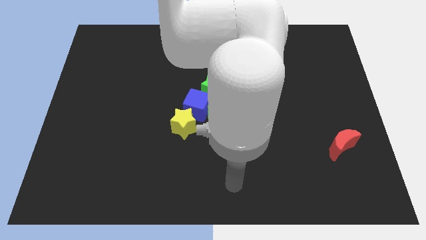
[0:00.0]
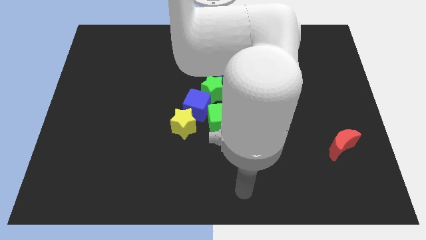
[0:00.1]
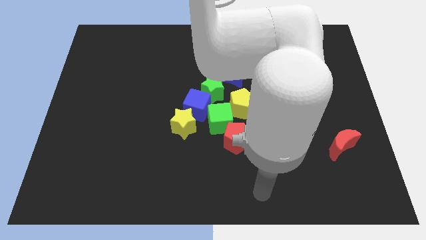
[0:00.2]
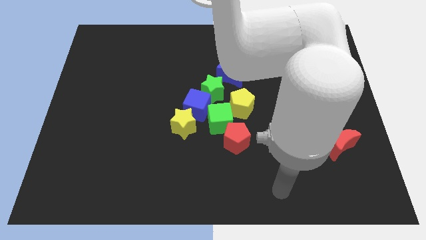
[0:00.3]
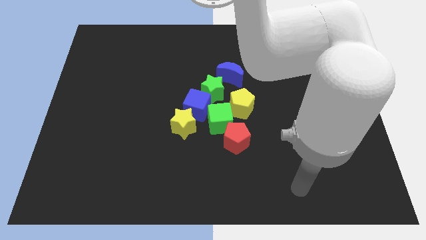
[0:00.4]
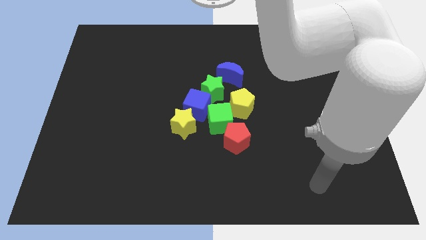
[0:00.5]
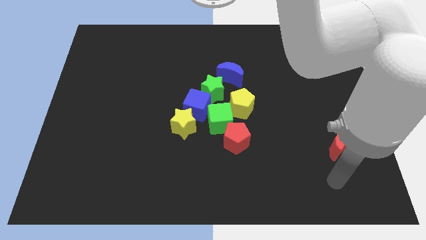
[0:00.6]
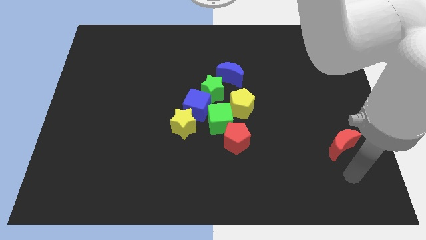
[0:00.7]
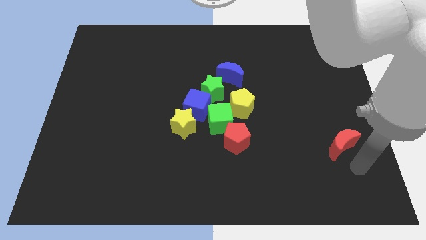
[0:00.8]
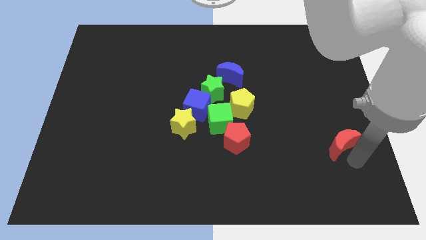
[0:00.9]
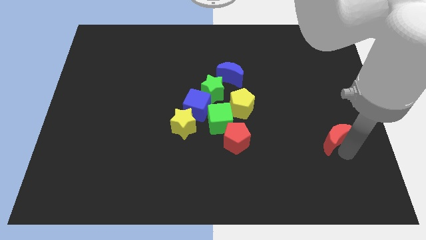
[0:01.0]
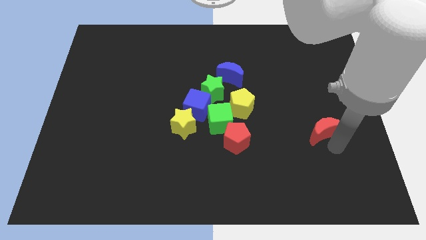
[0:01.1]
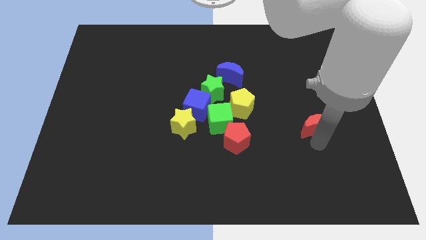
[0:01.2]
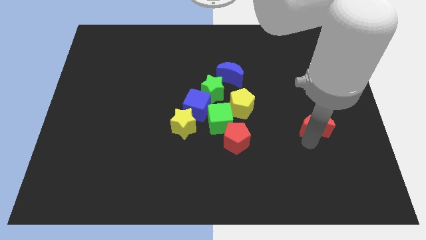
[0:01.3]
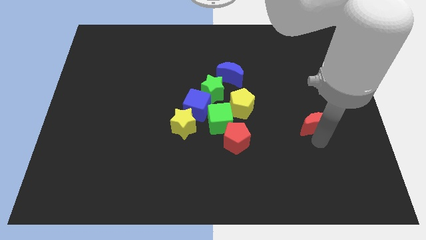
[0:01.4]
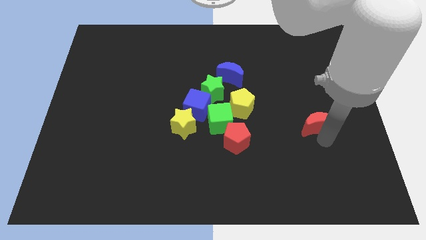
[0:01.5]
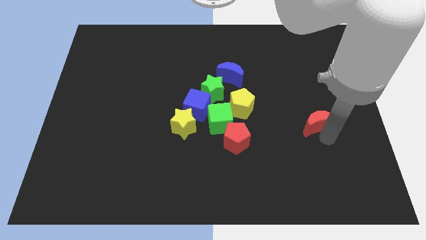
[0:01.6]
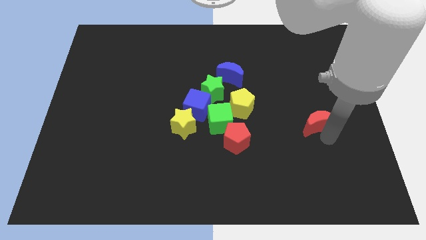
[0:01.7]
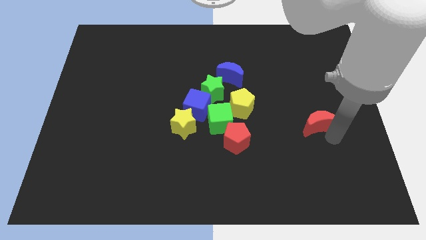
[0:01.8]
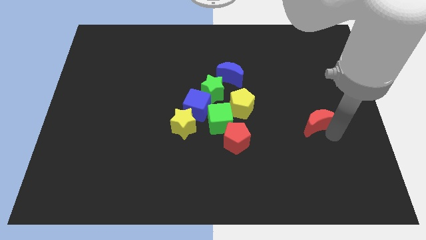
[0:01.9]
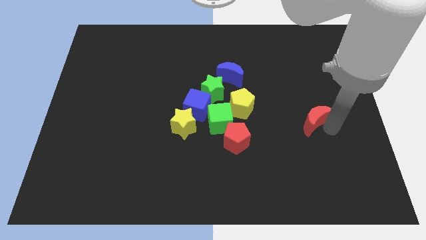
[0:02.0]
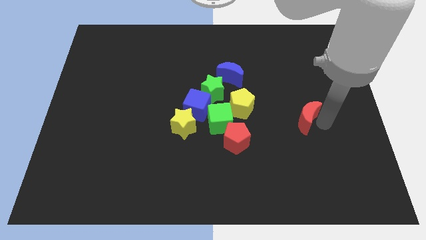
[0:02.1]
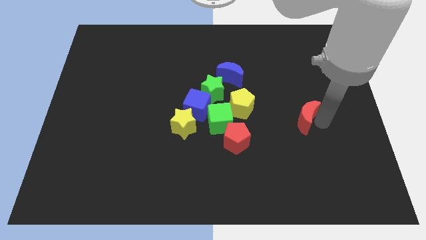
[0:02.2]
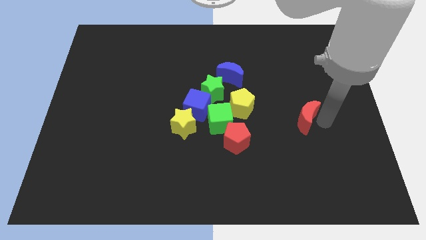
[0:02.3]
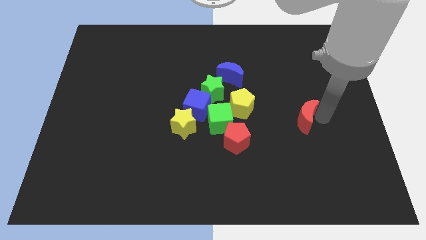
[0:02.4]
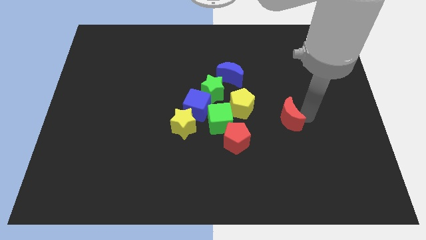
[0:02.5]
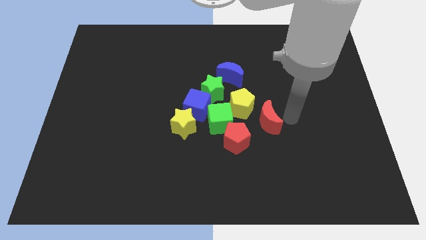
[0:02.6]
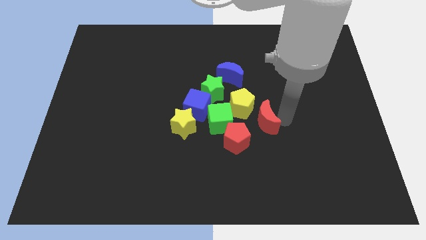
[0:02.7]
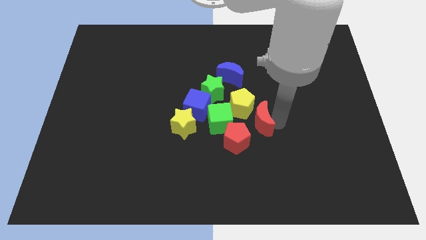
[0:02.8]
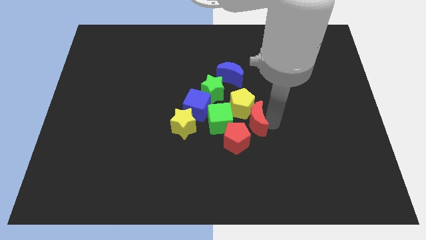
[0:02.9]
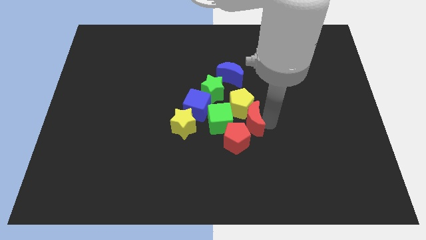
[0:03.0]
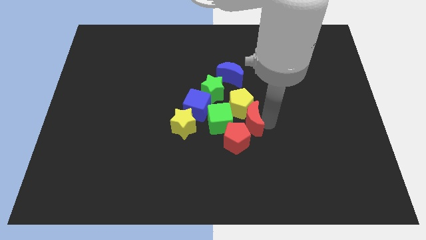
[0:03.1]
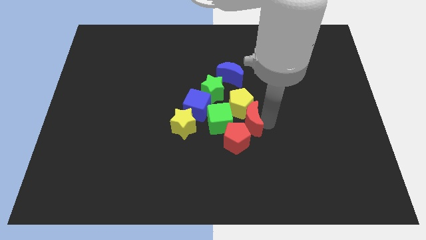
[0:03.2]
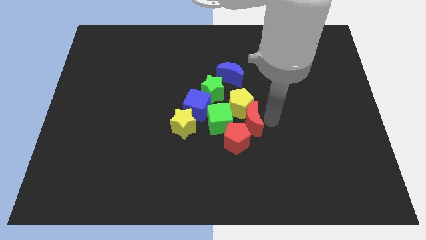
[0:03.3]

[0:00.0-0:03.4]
move the red crescent towards the group of blocks

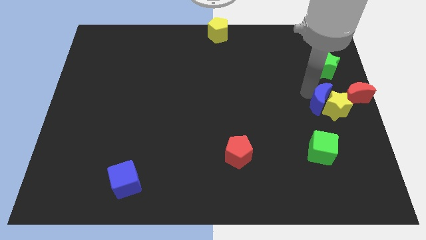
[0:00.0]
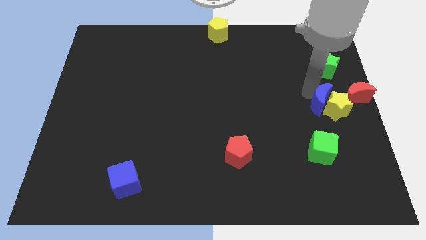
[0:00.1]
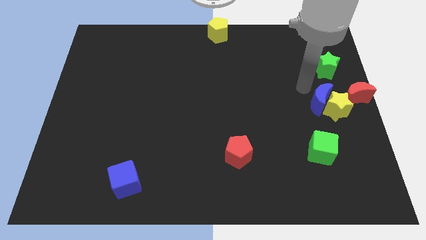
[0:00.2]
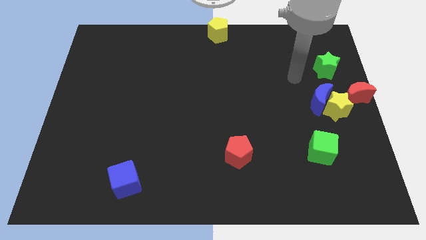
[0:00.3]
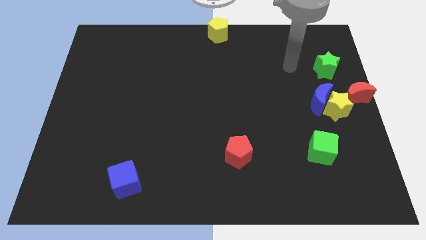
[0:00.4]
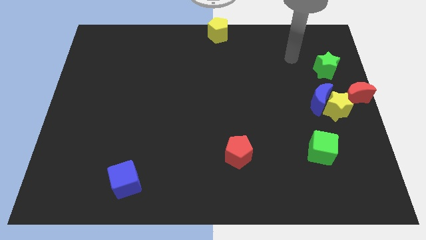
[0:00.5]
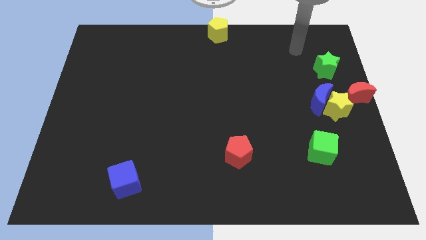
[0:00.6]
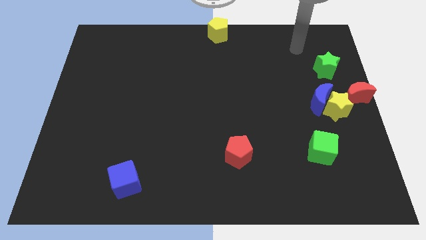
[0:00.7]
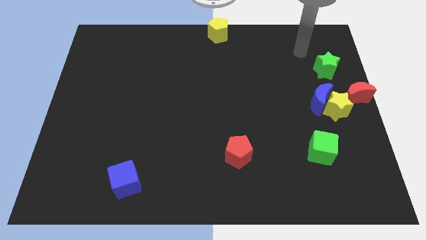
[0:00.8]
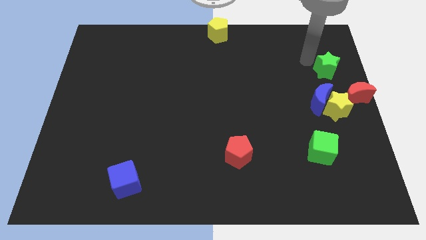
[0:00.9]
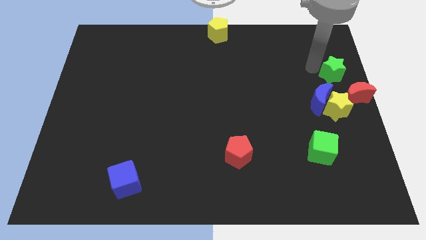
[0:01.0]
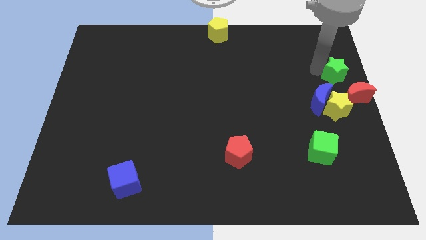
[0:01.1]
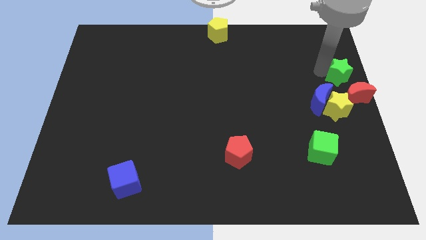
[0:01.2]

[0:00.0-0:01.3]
move your arm away from blue moon

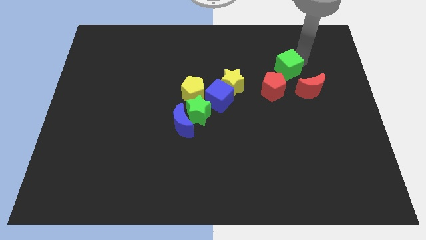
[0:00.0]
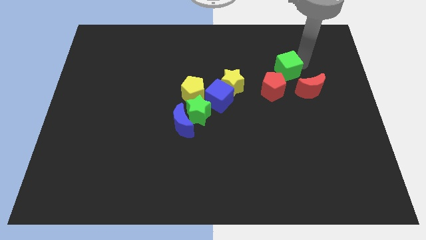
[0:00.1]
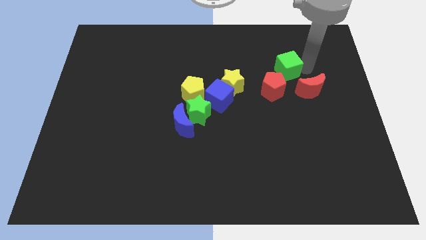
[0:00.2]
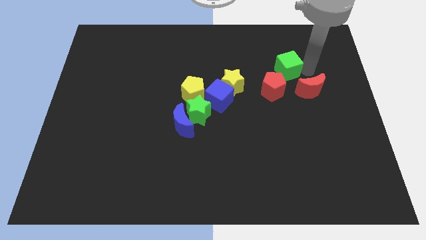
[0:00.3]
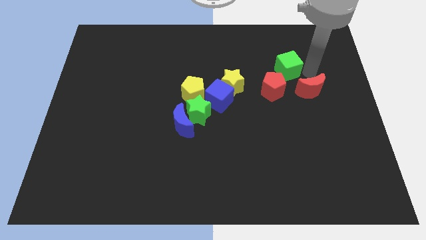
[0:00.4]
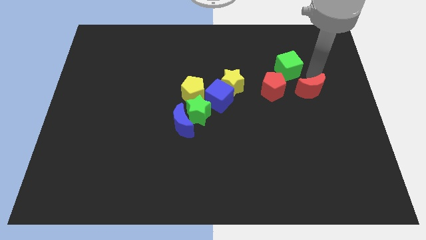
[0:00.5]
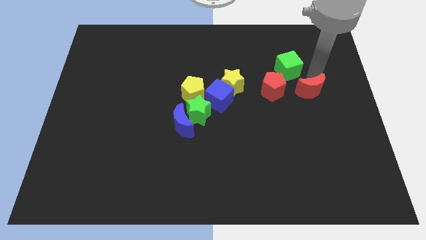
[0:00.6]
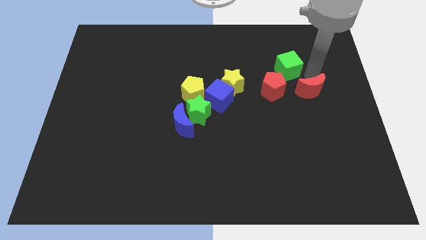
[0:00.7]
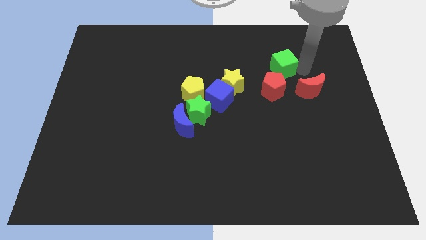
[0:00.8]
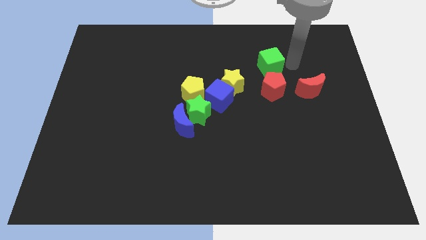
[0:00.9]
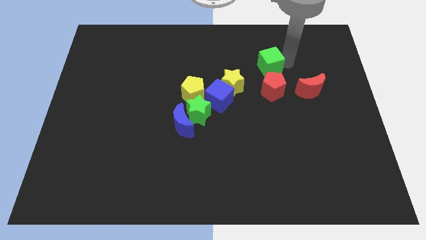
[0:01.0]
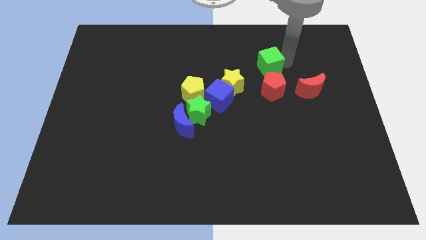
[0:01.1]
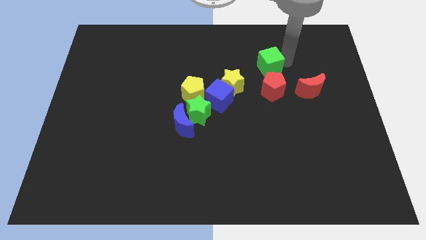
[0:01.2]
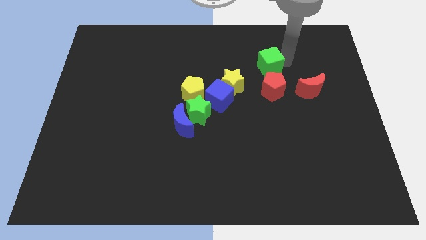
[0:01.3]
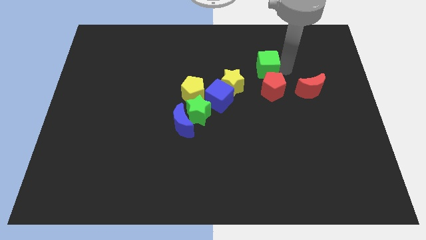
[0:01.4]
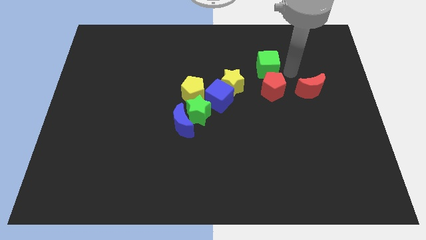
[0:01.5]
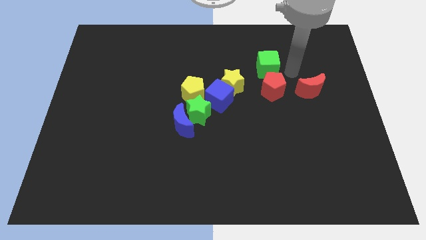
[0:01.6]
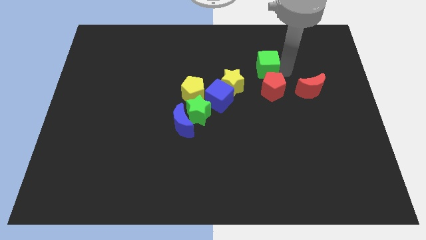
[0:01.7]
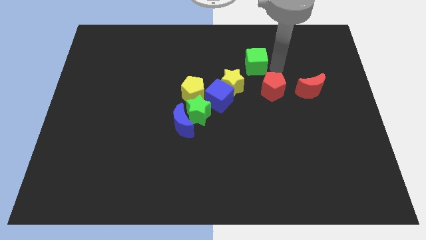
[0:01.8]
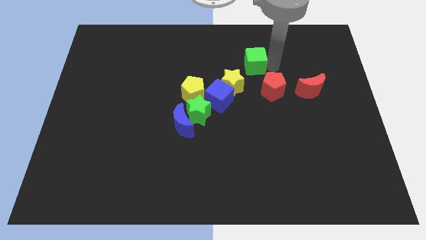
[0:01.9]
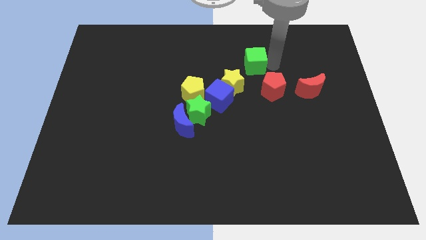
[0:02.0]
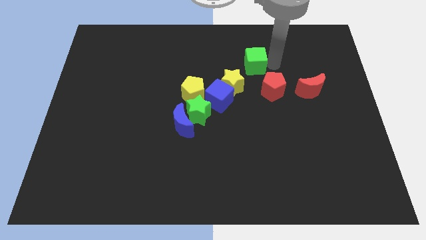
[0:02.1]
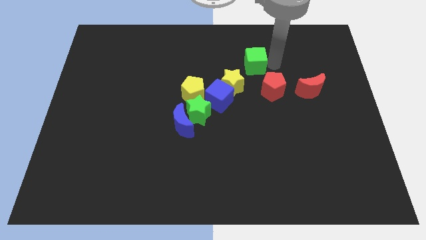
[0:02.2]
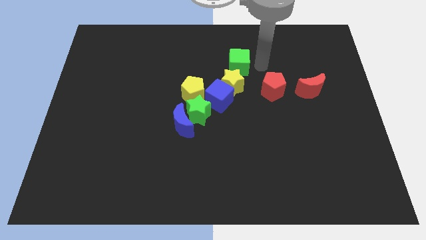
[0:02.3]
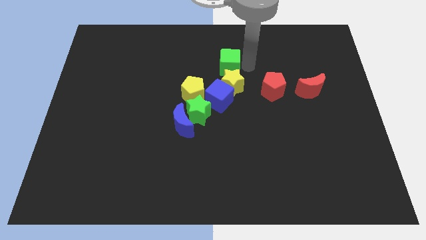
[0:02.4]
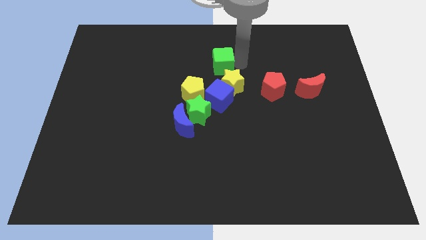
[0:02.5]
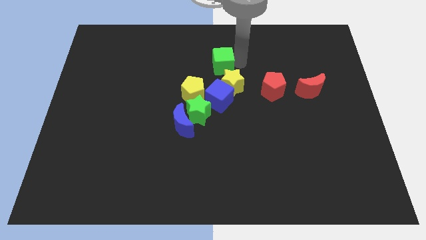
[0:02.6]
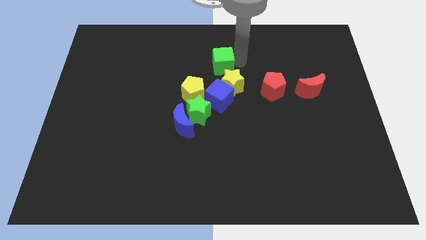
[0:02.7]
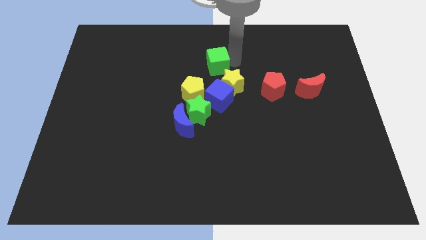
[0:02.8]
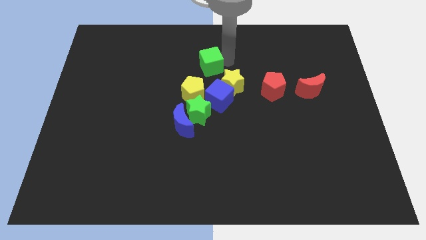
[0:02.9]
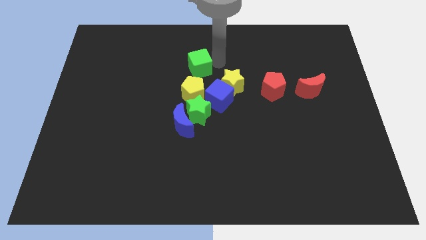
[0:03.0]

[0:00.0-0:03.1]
push the green cube towards the yellow pentagon

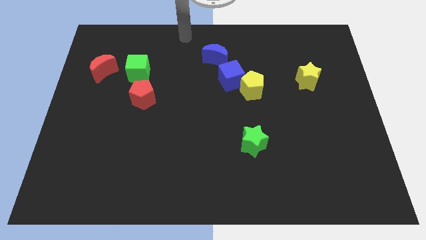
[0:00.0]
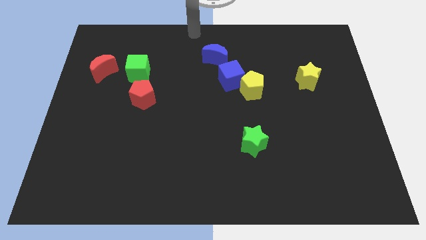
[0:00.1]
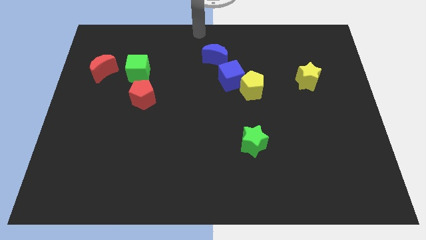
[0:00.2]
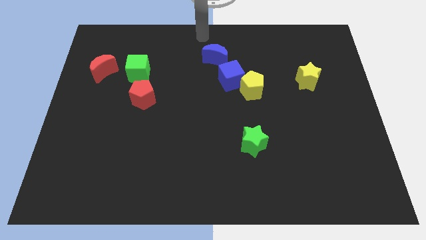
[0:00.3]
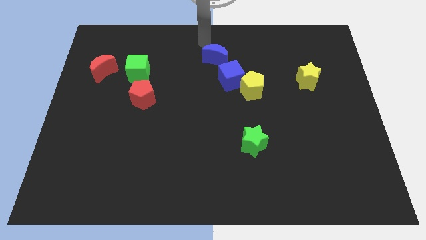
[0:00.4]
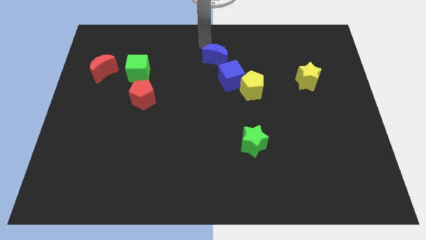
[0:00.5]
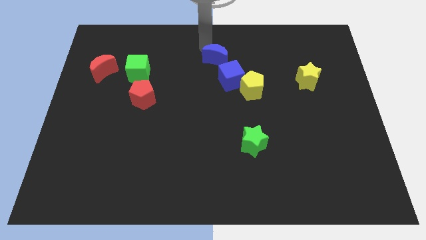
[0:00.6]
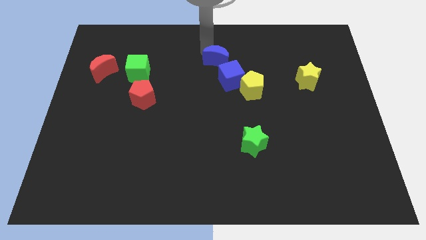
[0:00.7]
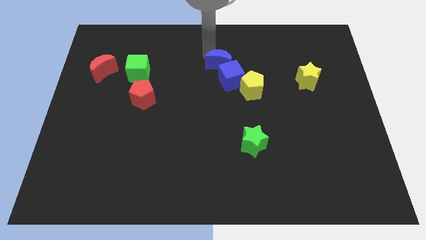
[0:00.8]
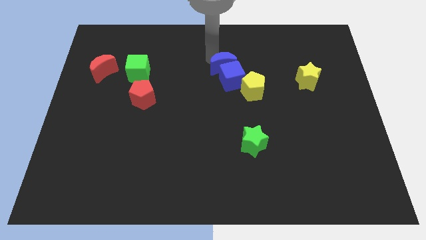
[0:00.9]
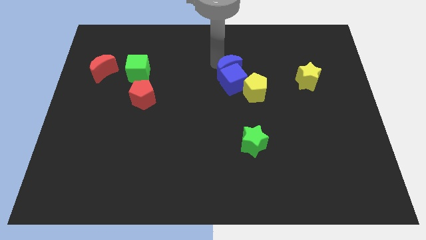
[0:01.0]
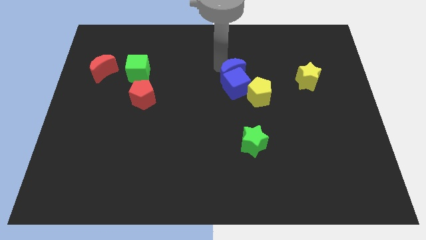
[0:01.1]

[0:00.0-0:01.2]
push the blue moon into the blue cube
